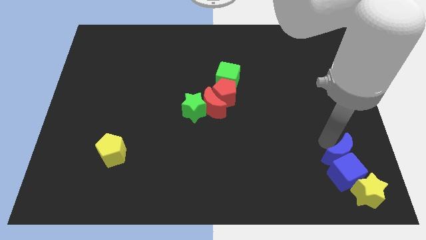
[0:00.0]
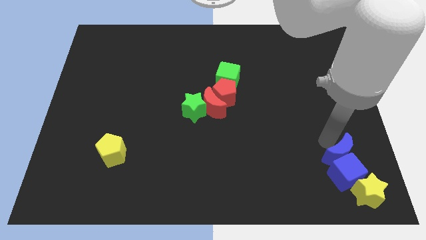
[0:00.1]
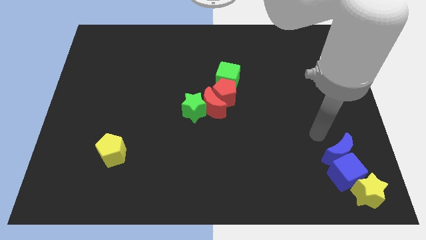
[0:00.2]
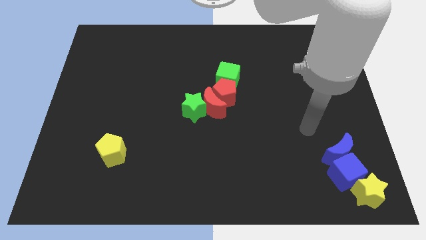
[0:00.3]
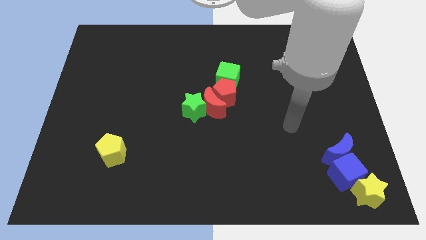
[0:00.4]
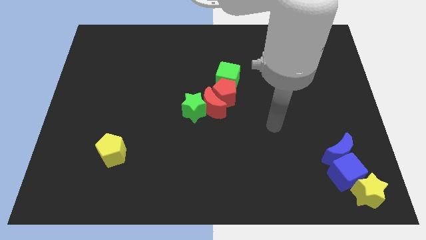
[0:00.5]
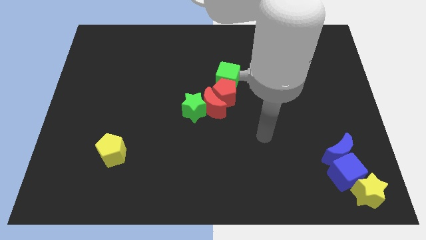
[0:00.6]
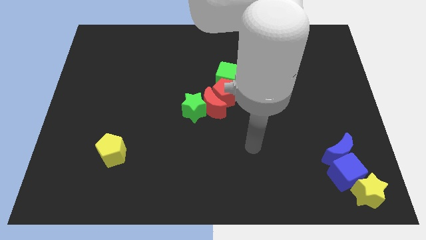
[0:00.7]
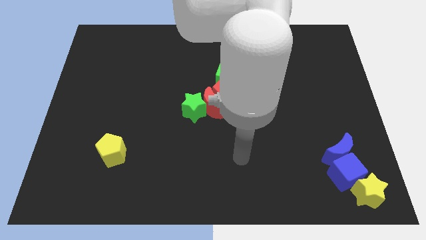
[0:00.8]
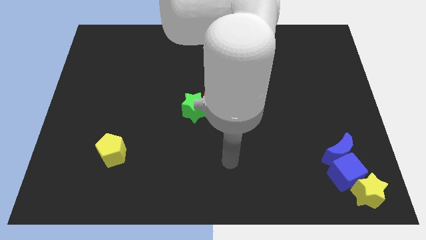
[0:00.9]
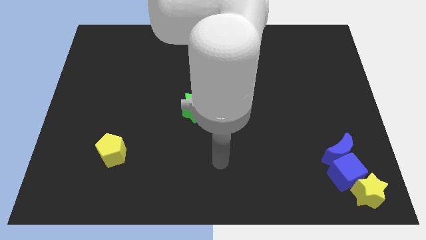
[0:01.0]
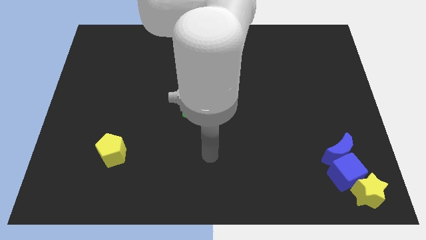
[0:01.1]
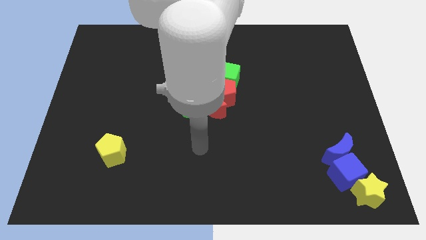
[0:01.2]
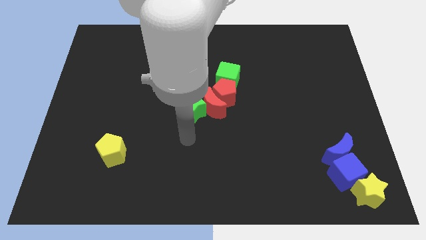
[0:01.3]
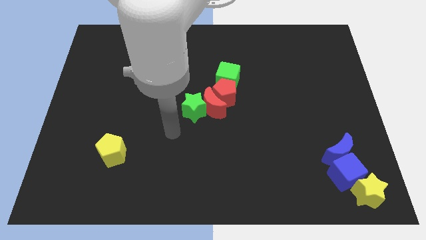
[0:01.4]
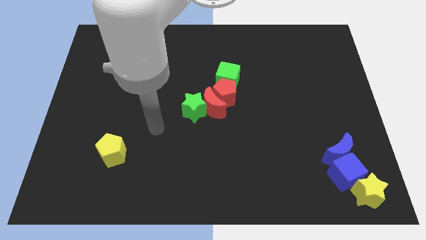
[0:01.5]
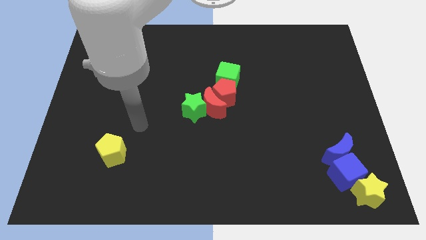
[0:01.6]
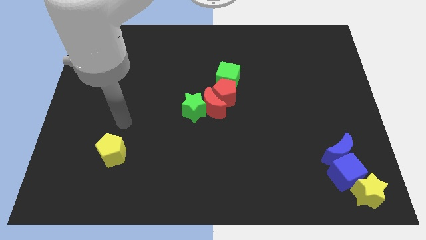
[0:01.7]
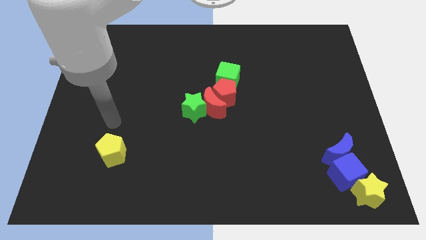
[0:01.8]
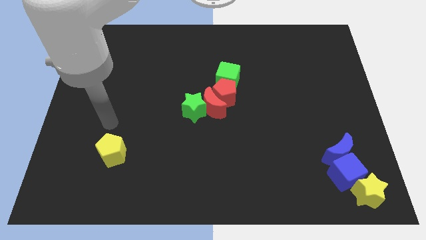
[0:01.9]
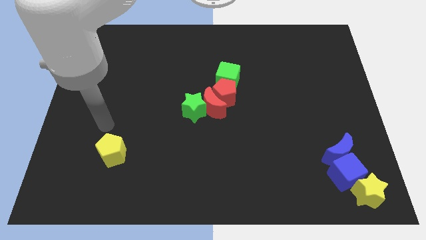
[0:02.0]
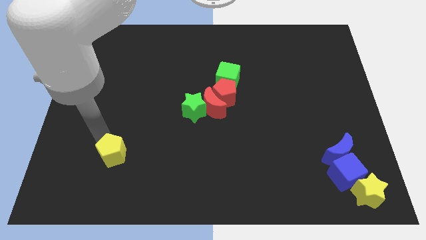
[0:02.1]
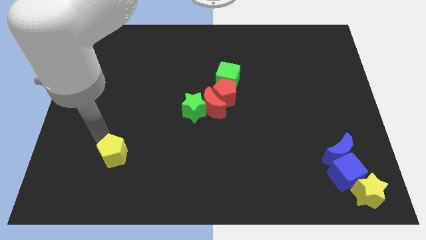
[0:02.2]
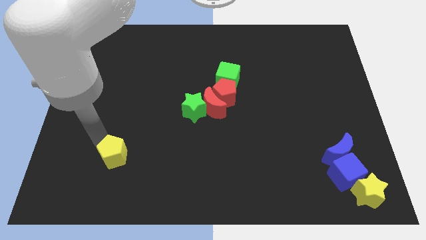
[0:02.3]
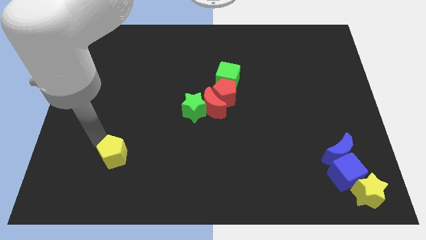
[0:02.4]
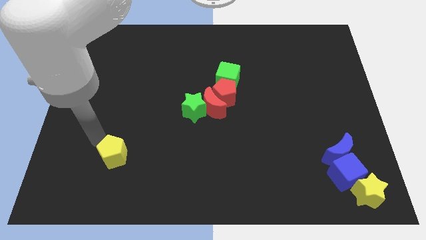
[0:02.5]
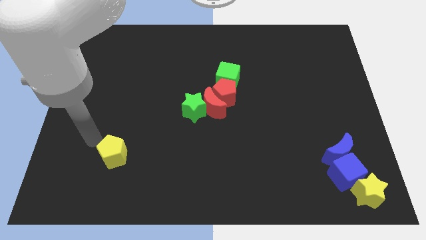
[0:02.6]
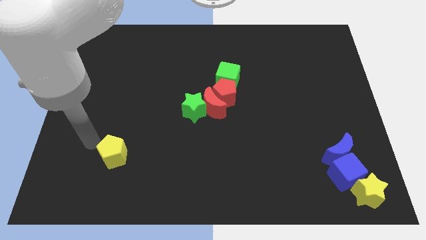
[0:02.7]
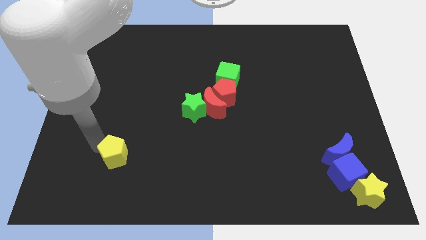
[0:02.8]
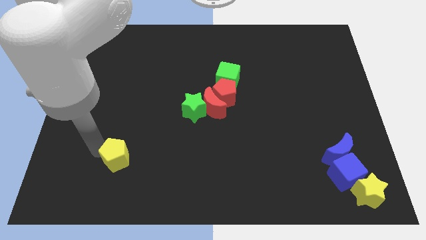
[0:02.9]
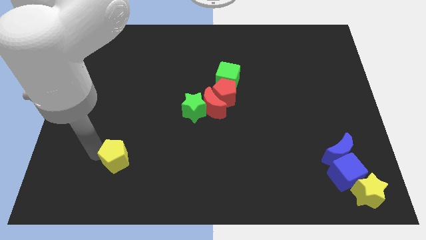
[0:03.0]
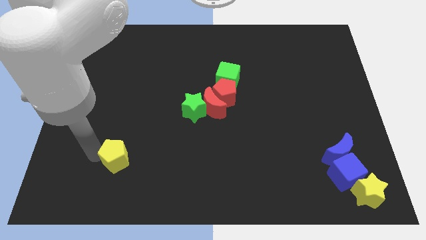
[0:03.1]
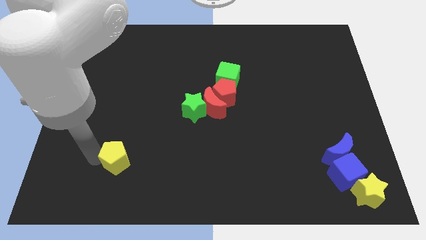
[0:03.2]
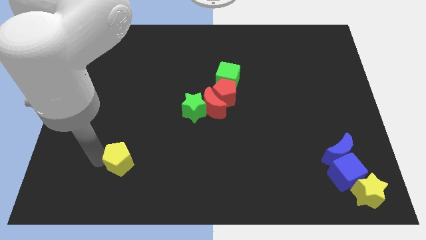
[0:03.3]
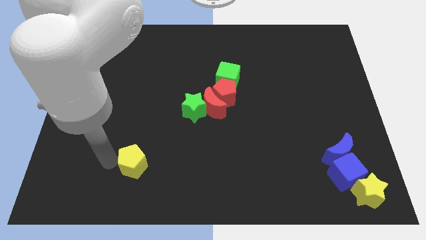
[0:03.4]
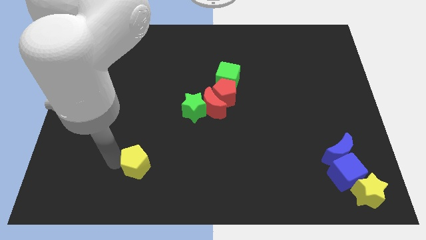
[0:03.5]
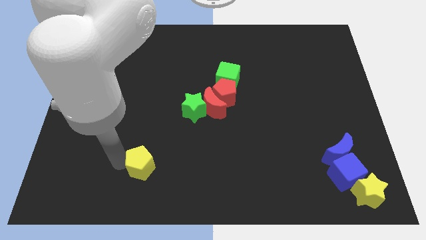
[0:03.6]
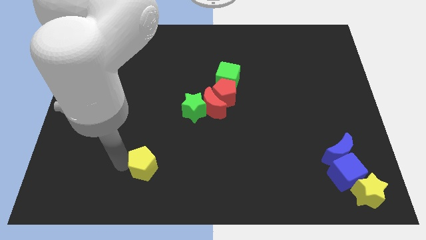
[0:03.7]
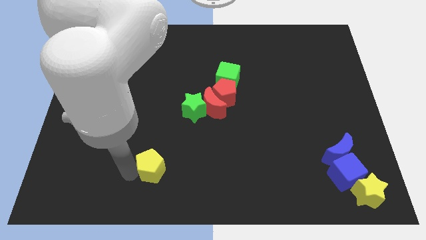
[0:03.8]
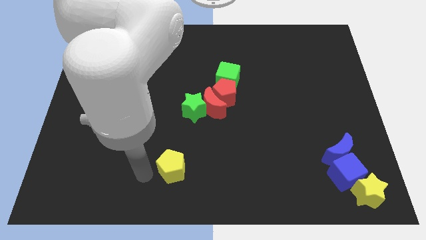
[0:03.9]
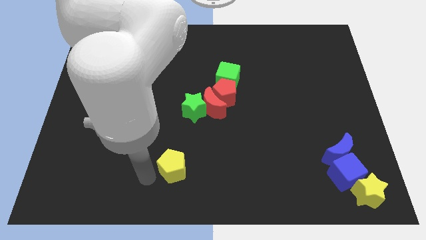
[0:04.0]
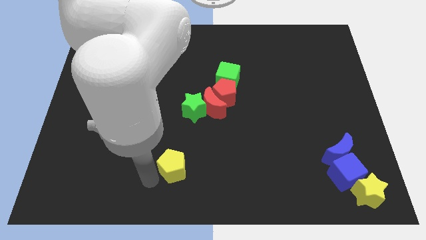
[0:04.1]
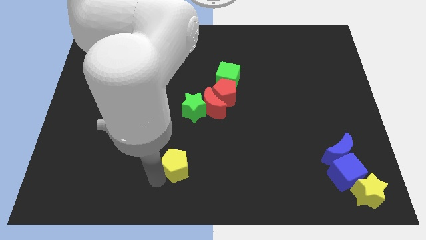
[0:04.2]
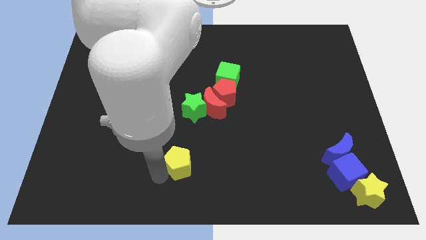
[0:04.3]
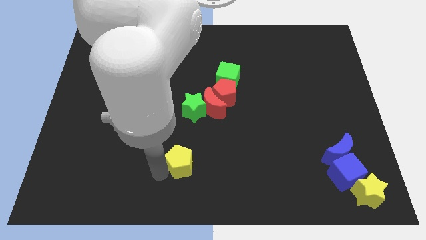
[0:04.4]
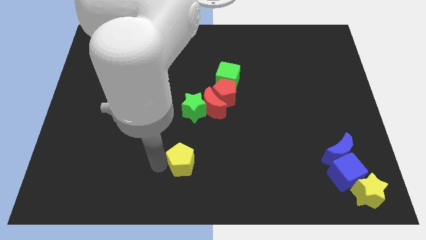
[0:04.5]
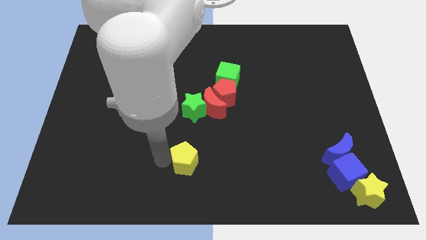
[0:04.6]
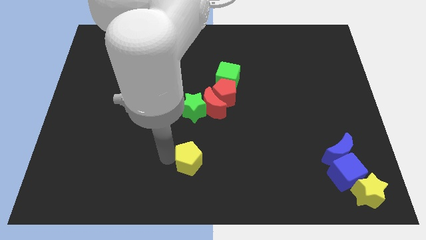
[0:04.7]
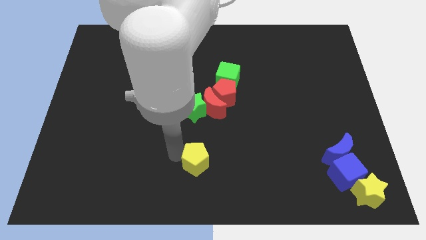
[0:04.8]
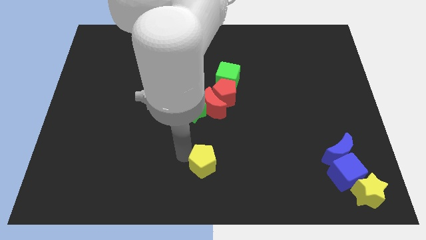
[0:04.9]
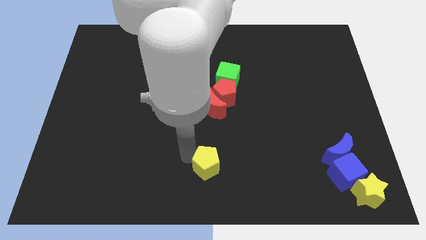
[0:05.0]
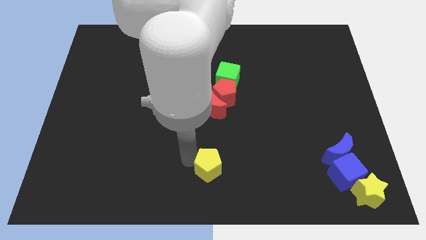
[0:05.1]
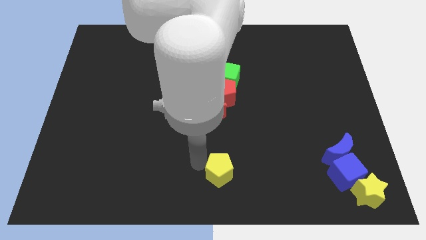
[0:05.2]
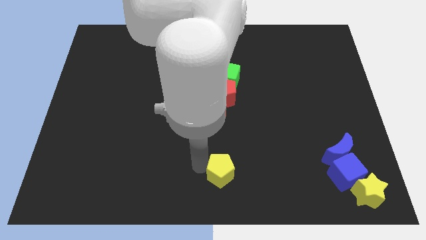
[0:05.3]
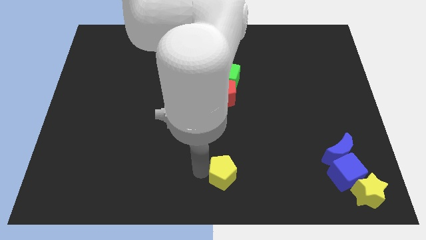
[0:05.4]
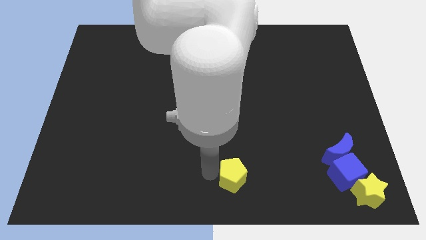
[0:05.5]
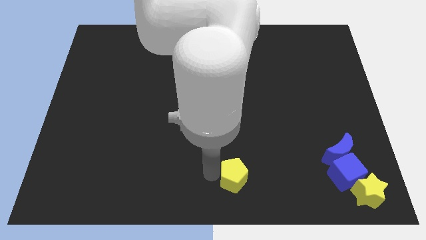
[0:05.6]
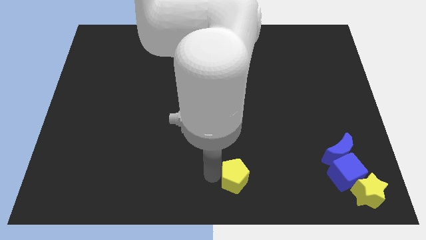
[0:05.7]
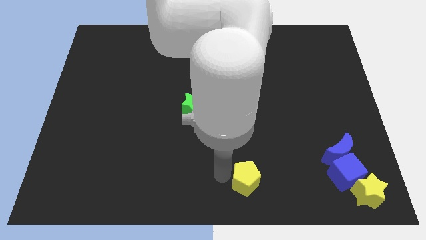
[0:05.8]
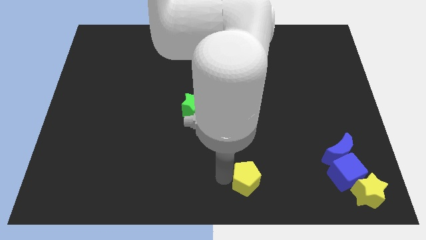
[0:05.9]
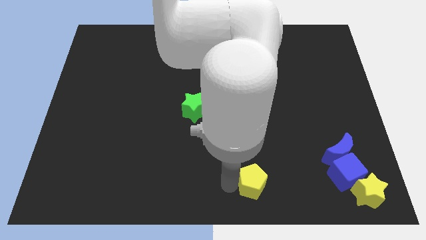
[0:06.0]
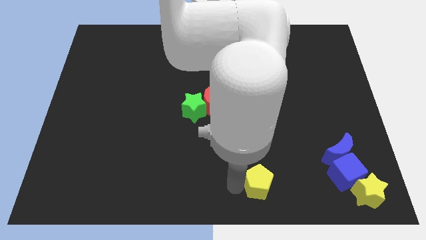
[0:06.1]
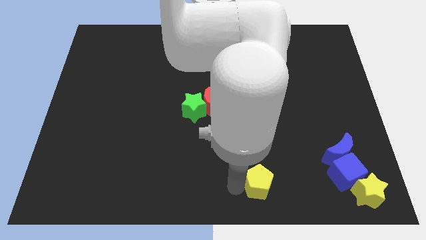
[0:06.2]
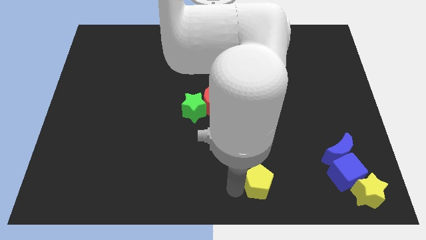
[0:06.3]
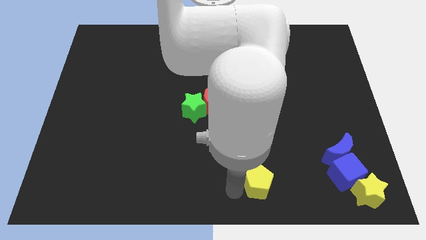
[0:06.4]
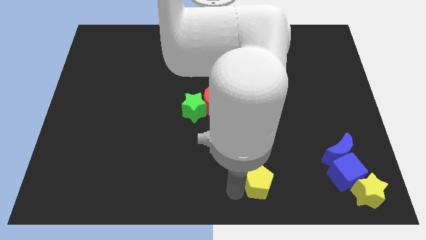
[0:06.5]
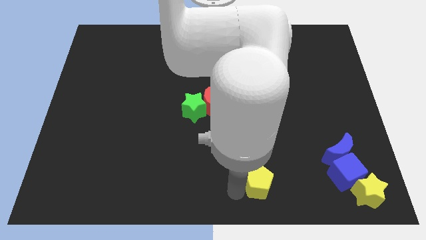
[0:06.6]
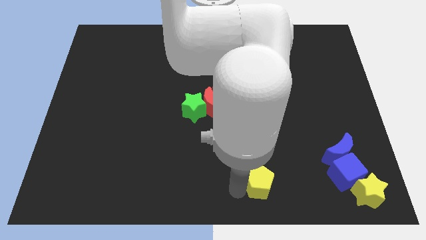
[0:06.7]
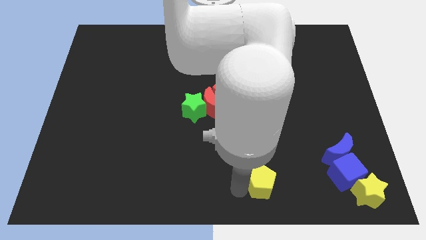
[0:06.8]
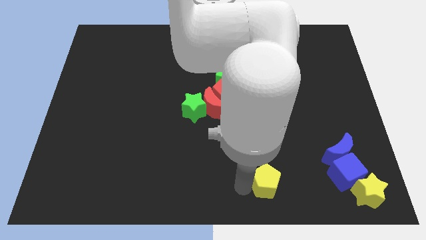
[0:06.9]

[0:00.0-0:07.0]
push the yellow pentagon towards the blue cube

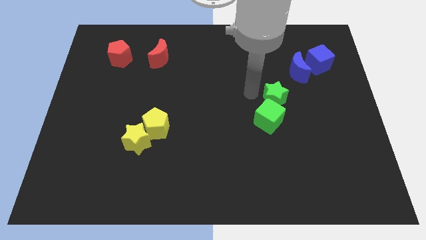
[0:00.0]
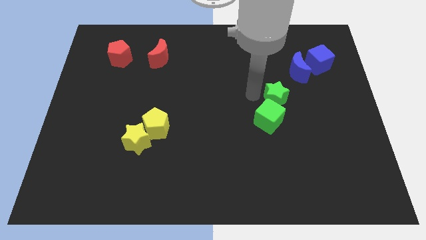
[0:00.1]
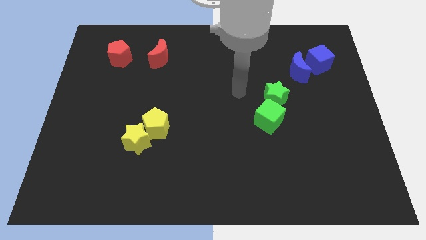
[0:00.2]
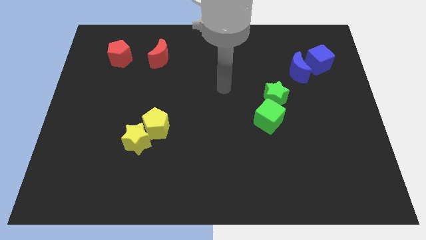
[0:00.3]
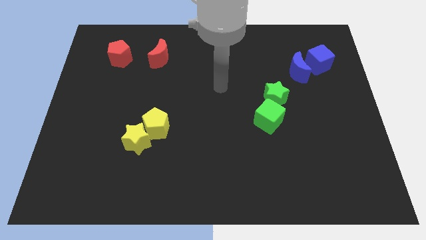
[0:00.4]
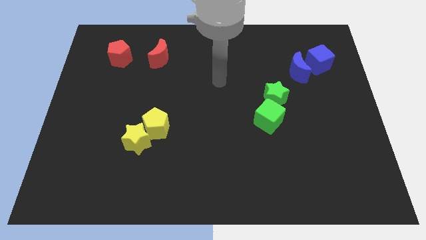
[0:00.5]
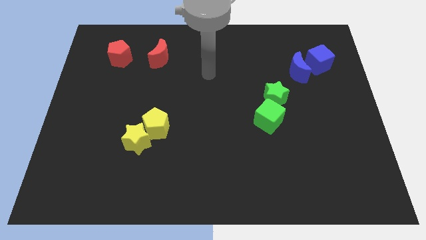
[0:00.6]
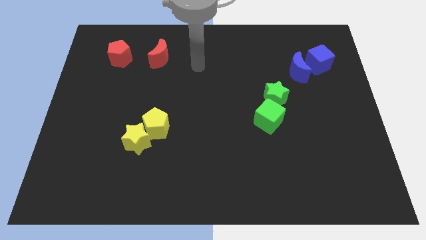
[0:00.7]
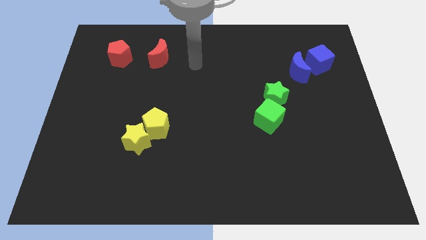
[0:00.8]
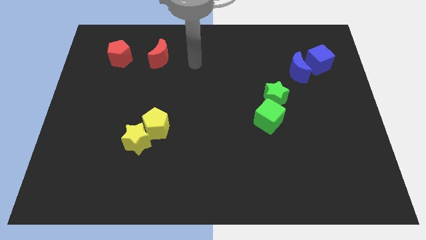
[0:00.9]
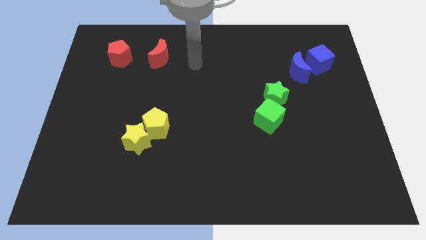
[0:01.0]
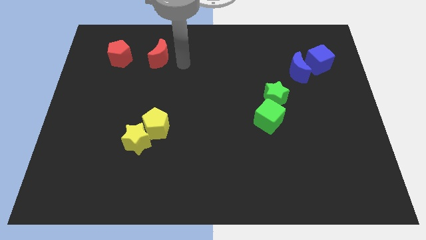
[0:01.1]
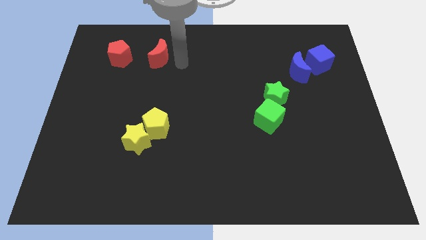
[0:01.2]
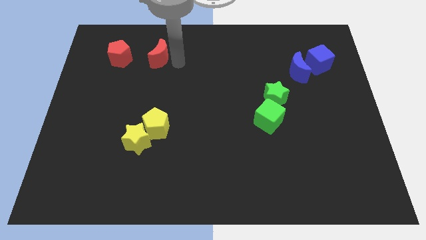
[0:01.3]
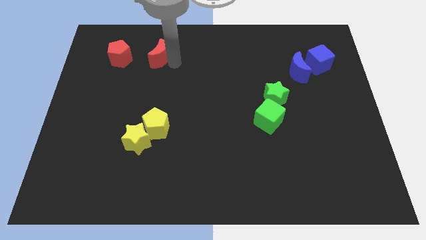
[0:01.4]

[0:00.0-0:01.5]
point your arm at the right side of the red crescent

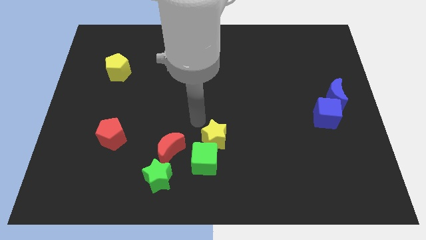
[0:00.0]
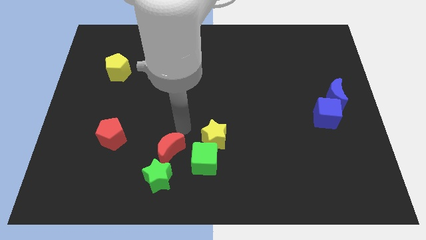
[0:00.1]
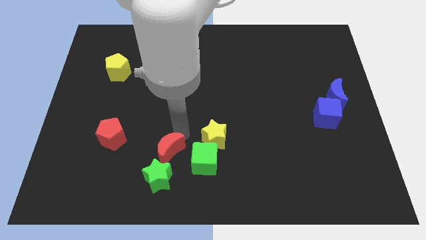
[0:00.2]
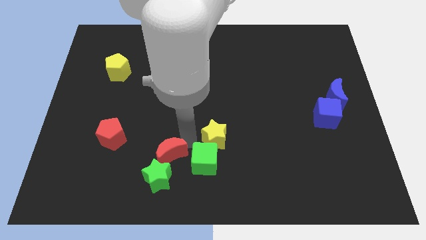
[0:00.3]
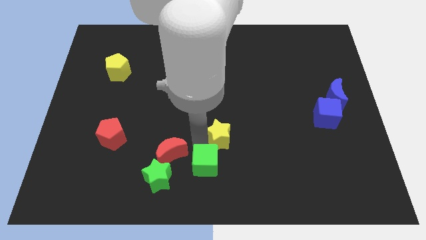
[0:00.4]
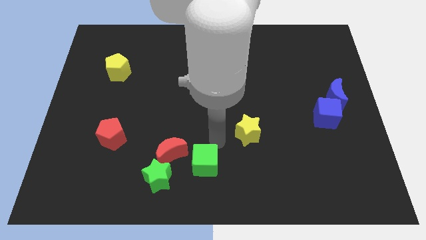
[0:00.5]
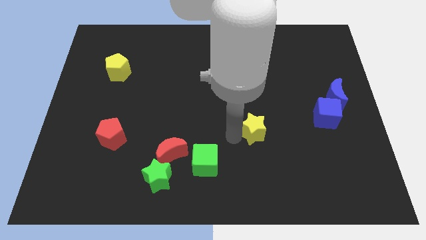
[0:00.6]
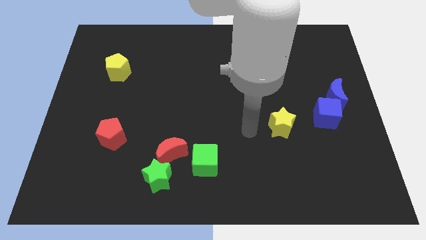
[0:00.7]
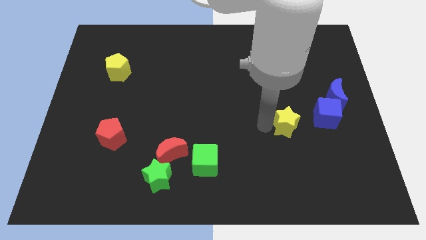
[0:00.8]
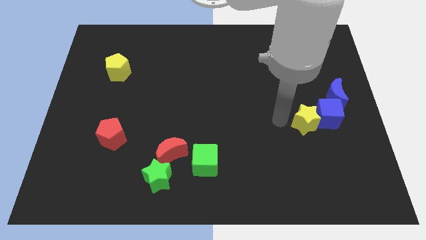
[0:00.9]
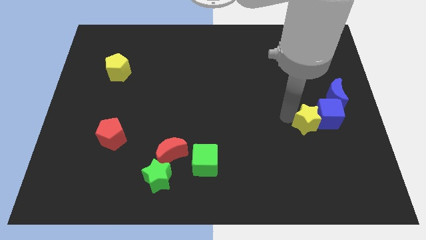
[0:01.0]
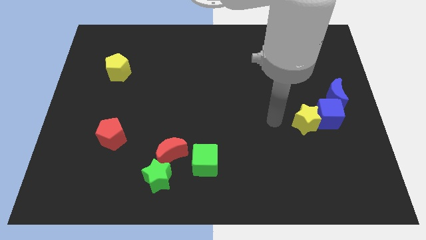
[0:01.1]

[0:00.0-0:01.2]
push the yellow star into the blue cube
